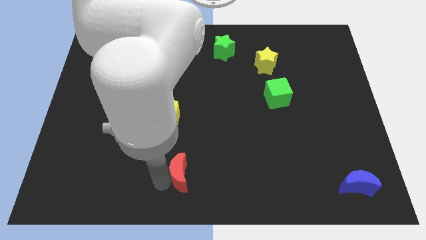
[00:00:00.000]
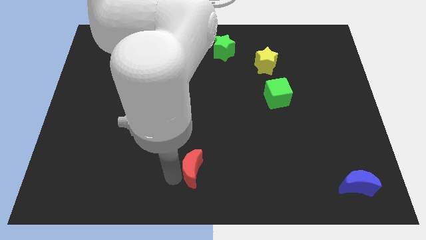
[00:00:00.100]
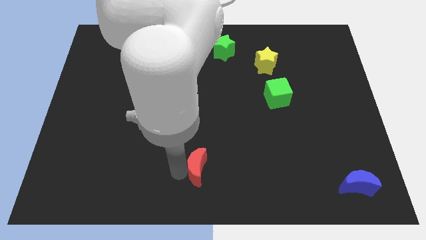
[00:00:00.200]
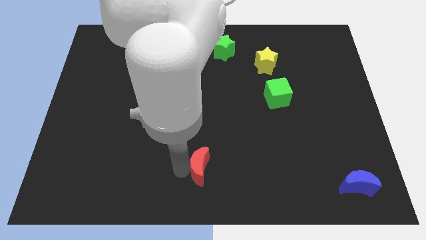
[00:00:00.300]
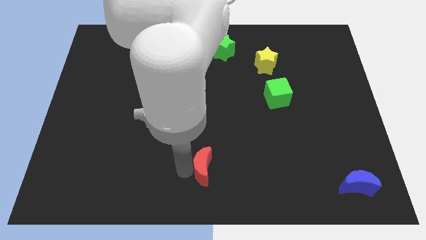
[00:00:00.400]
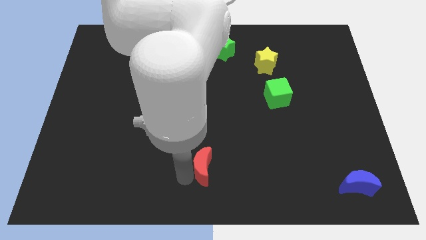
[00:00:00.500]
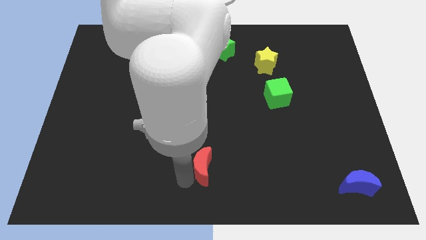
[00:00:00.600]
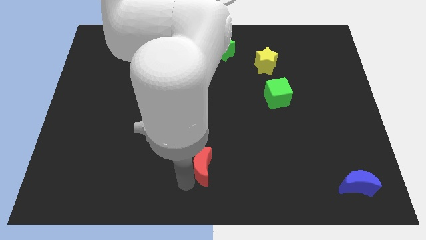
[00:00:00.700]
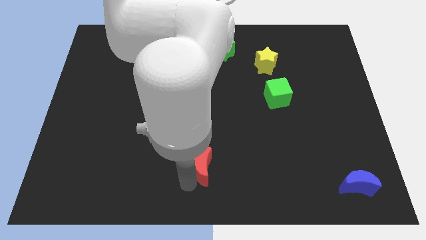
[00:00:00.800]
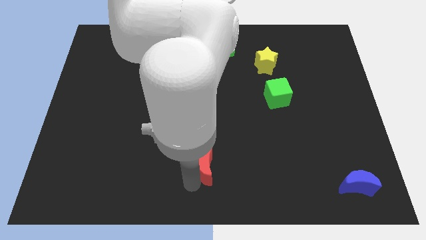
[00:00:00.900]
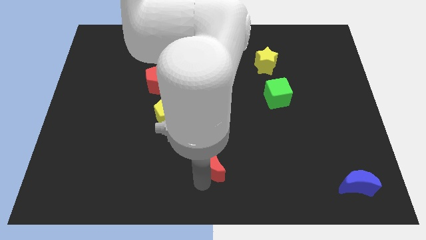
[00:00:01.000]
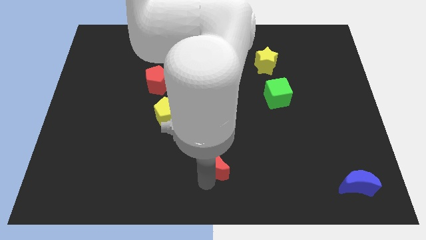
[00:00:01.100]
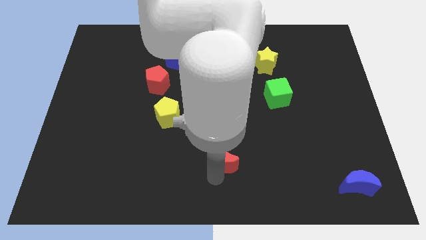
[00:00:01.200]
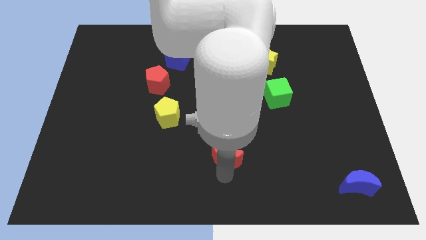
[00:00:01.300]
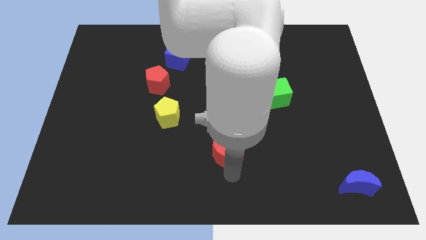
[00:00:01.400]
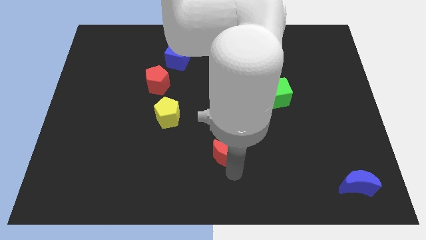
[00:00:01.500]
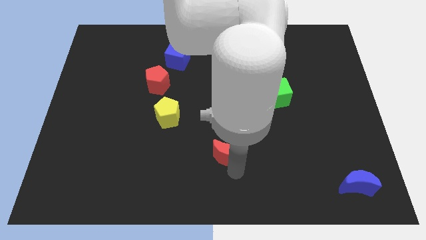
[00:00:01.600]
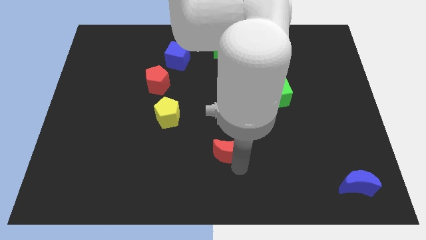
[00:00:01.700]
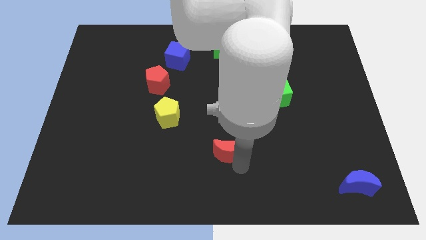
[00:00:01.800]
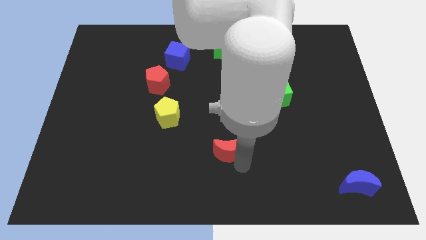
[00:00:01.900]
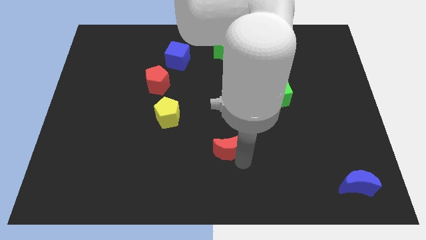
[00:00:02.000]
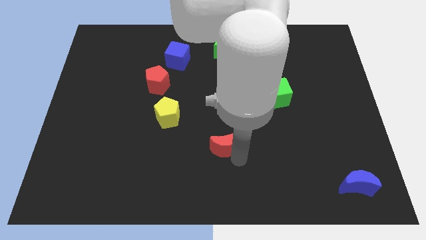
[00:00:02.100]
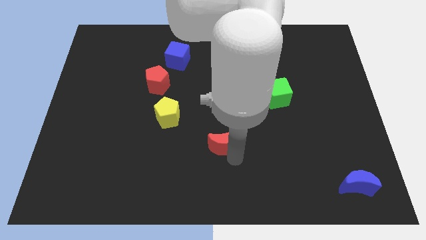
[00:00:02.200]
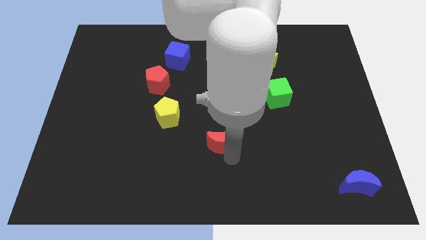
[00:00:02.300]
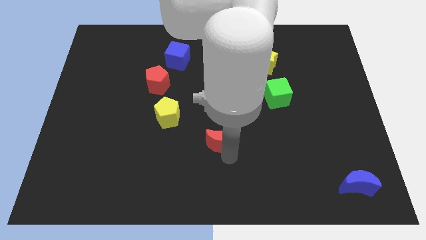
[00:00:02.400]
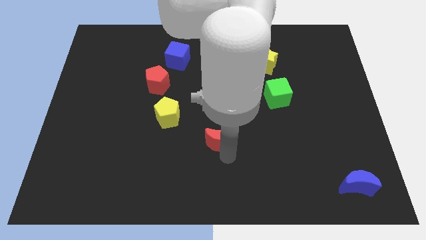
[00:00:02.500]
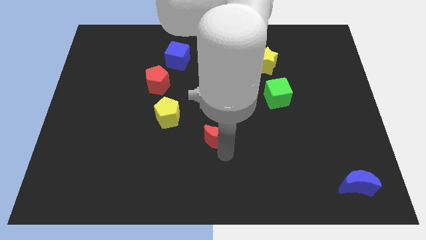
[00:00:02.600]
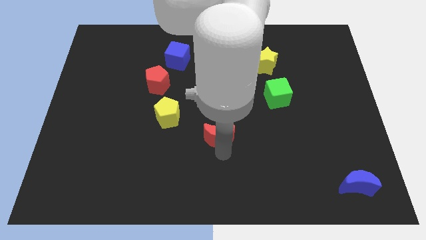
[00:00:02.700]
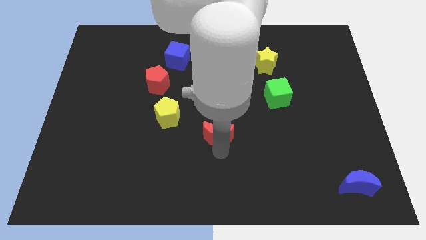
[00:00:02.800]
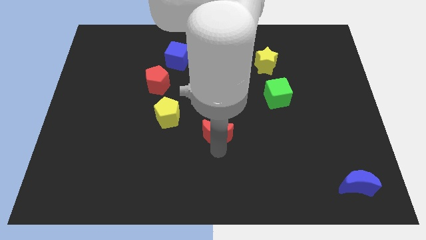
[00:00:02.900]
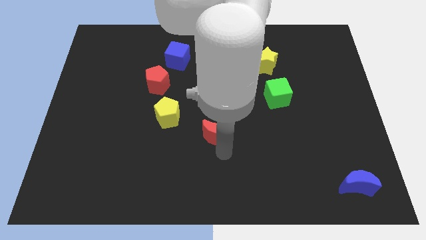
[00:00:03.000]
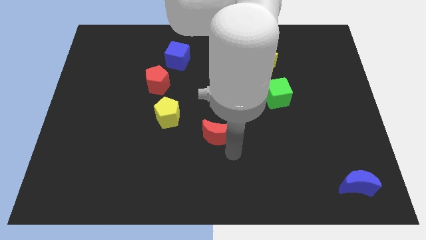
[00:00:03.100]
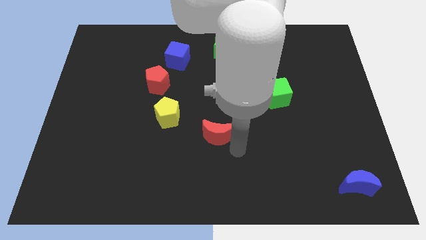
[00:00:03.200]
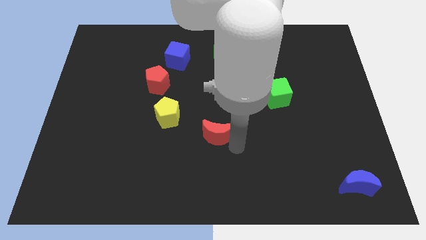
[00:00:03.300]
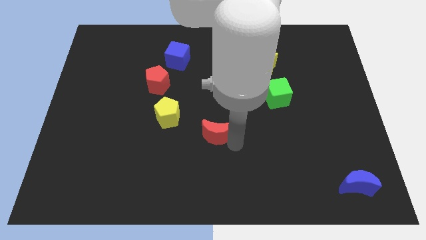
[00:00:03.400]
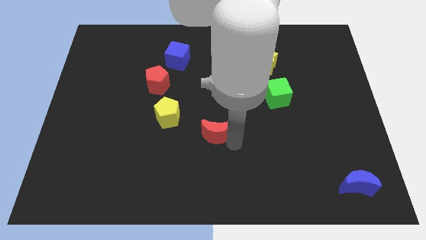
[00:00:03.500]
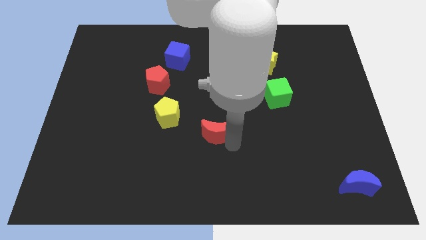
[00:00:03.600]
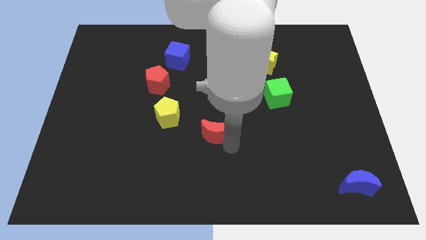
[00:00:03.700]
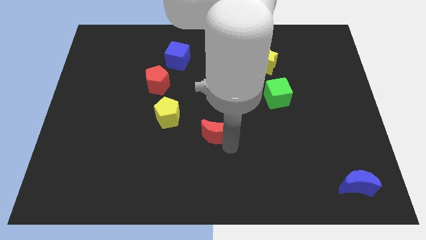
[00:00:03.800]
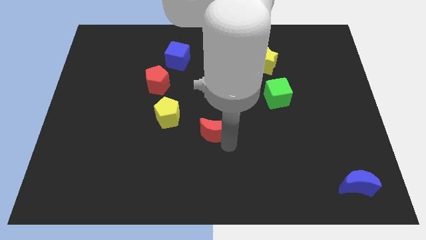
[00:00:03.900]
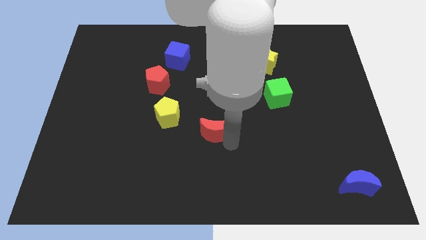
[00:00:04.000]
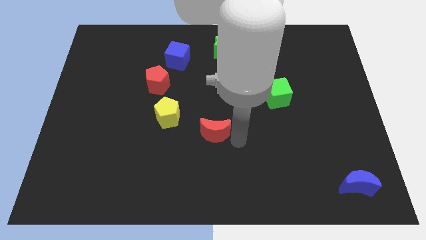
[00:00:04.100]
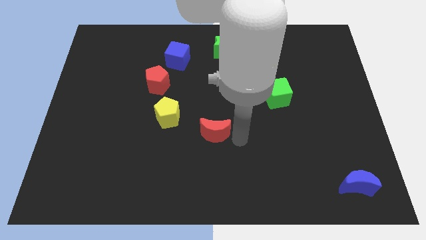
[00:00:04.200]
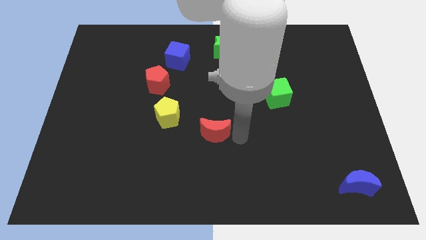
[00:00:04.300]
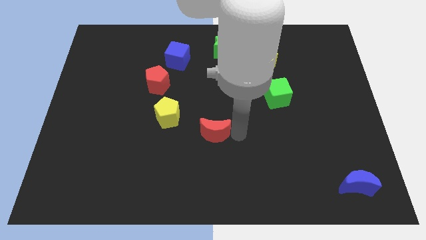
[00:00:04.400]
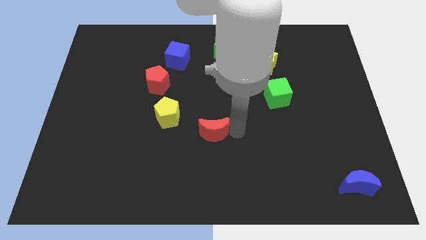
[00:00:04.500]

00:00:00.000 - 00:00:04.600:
place the red moon to the right bottom off the yellow pentagon

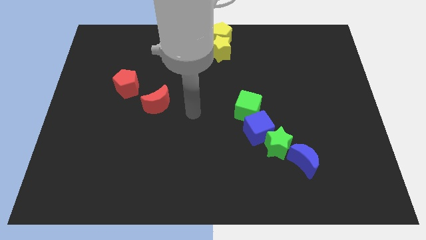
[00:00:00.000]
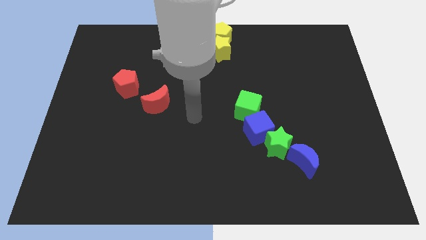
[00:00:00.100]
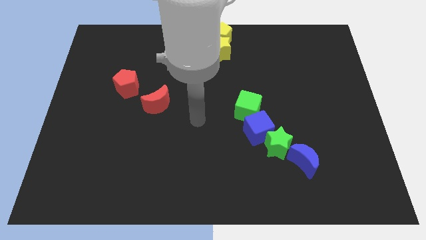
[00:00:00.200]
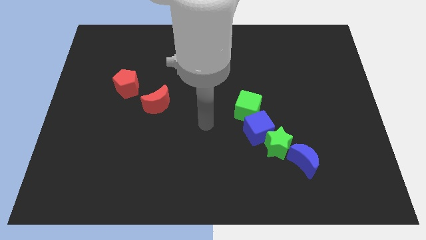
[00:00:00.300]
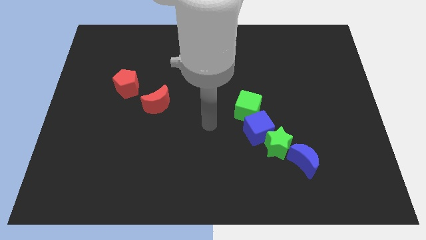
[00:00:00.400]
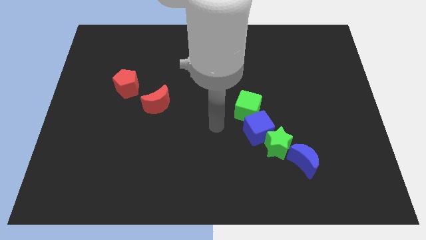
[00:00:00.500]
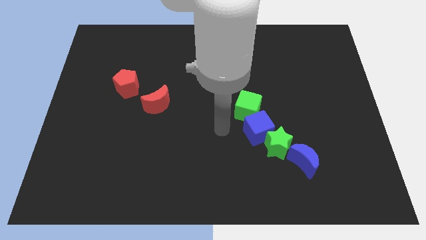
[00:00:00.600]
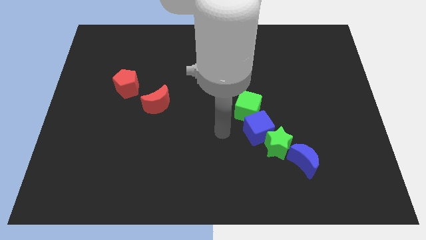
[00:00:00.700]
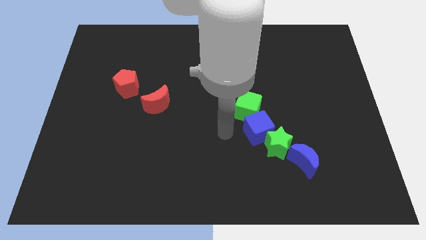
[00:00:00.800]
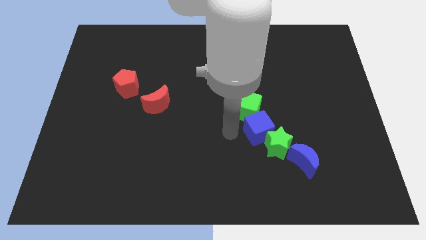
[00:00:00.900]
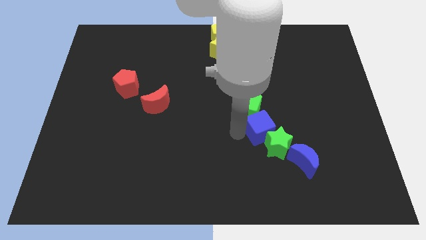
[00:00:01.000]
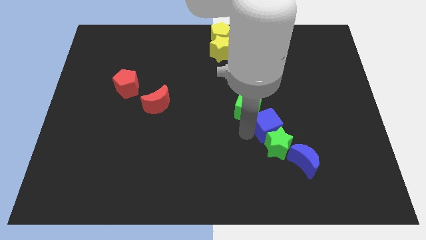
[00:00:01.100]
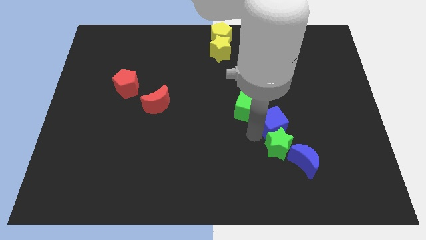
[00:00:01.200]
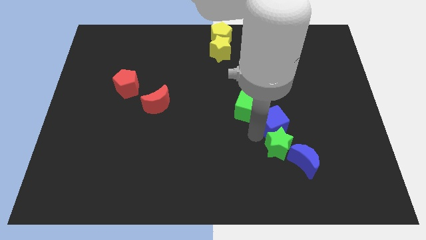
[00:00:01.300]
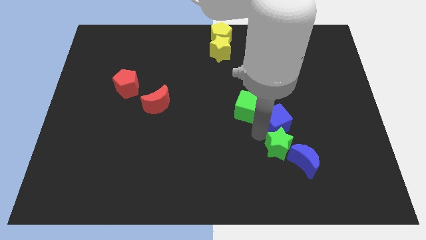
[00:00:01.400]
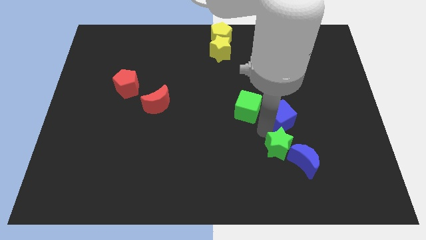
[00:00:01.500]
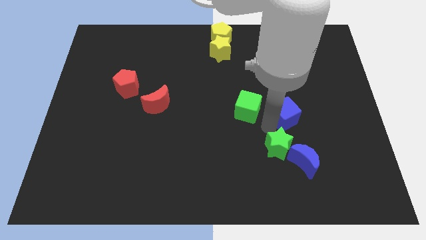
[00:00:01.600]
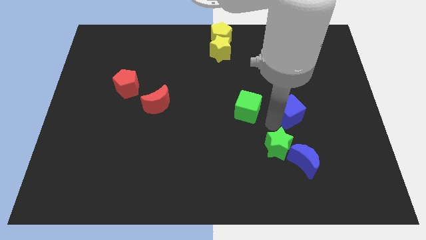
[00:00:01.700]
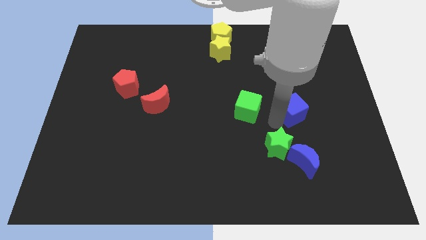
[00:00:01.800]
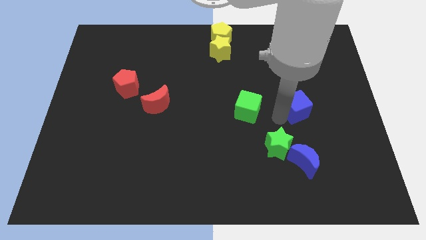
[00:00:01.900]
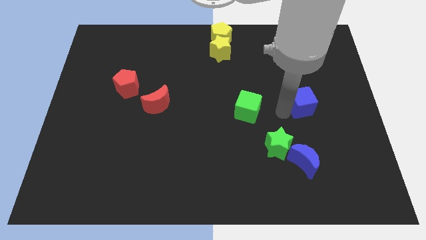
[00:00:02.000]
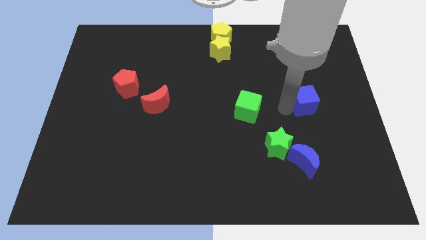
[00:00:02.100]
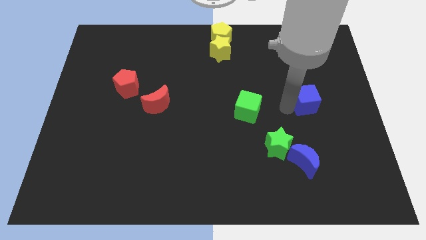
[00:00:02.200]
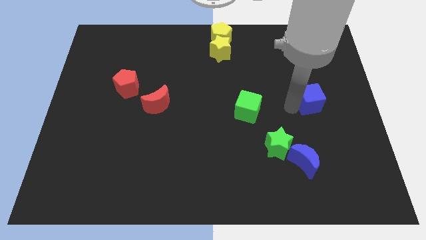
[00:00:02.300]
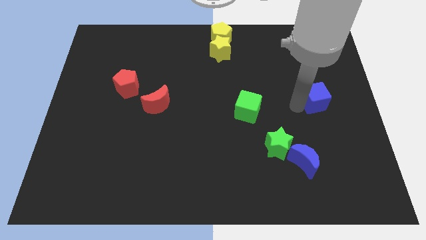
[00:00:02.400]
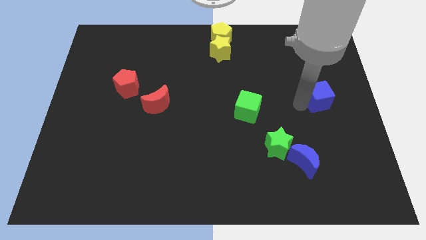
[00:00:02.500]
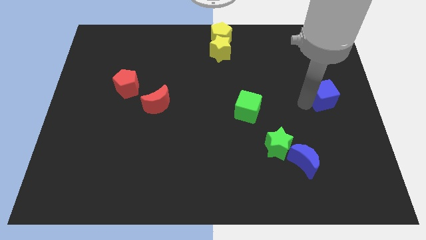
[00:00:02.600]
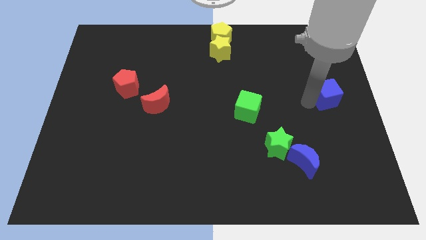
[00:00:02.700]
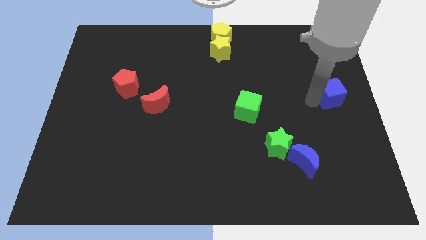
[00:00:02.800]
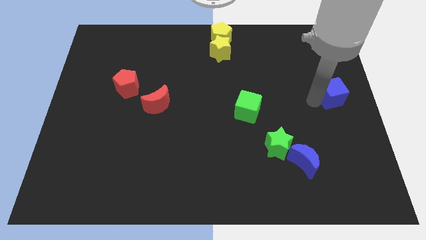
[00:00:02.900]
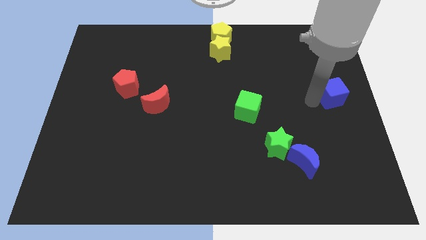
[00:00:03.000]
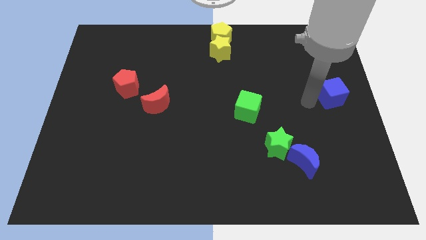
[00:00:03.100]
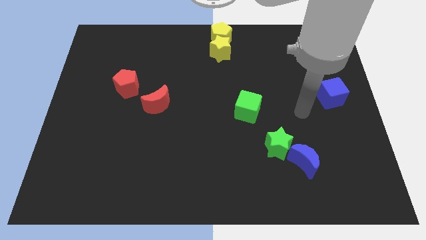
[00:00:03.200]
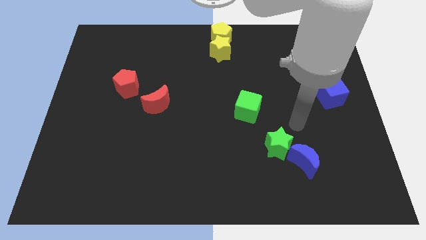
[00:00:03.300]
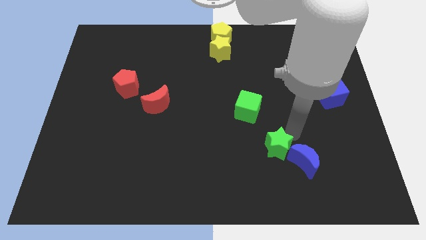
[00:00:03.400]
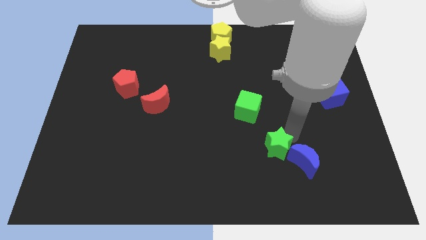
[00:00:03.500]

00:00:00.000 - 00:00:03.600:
move the blue cube to the right center of the board

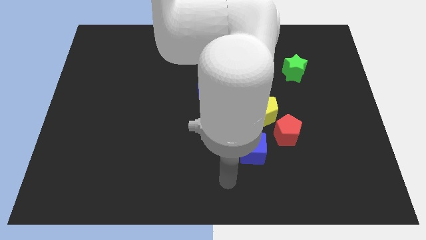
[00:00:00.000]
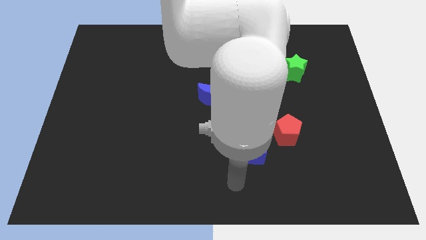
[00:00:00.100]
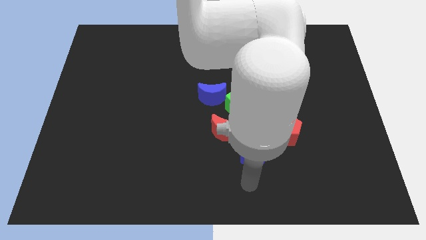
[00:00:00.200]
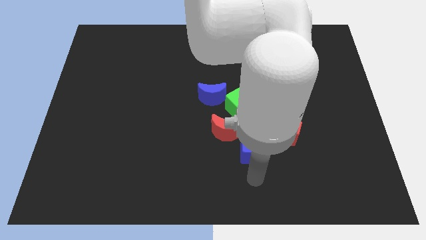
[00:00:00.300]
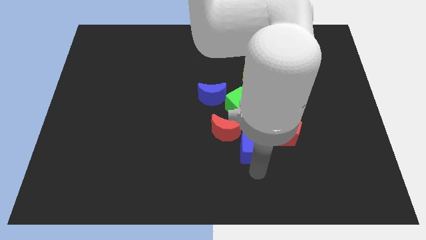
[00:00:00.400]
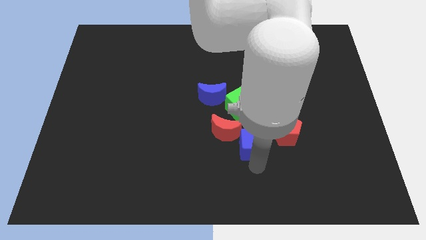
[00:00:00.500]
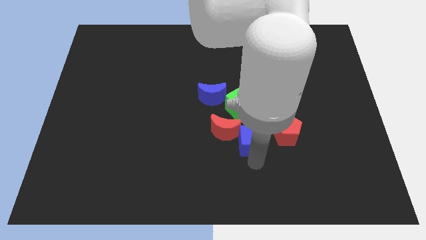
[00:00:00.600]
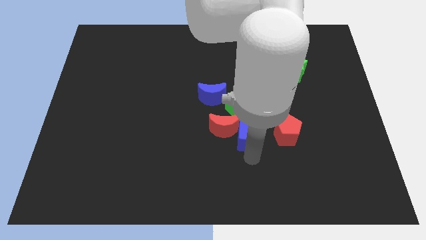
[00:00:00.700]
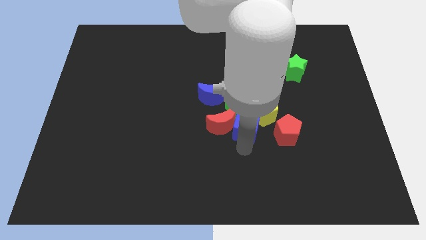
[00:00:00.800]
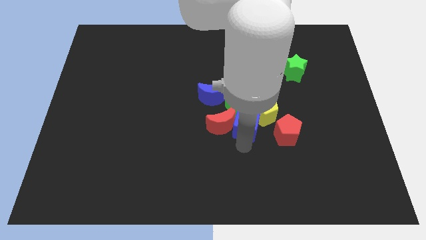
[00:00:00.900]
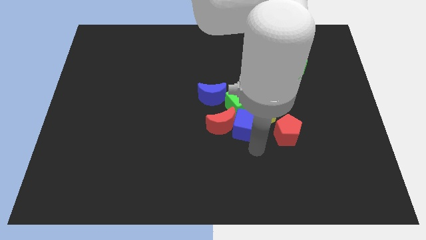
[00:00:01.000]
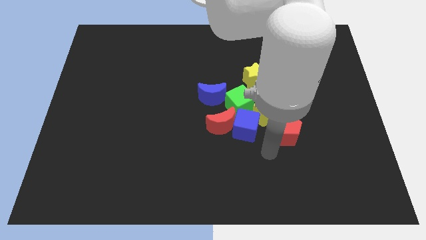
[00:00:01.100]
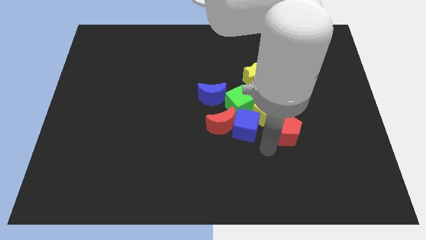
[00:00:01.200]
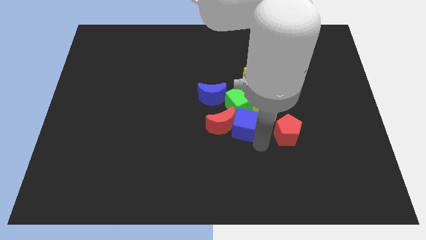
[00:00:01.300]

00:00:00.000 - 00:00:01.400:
push the ble cube into the green cube
